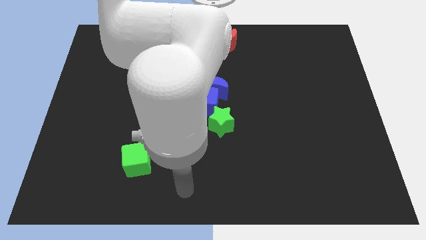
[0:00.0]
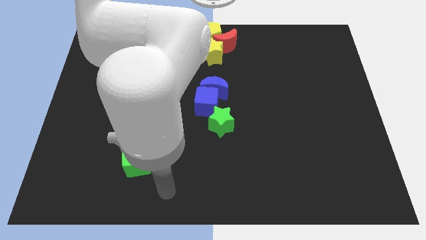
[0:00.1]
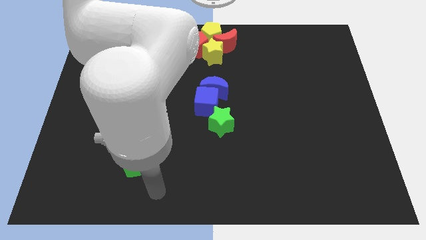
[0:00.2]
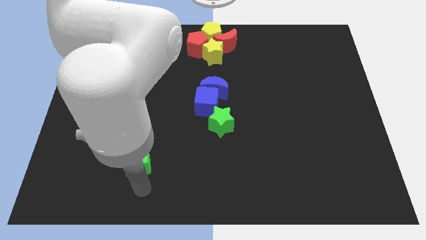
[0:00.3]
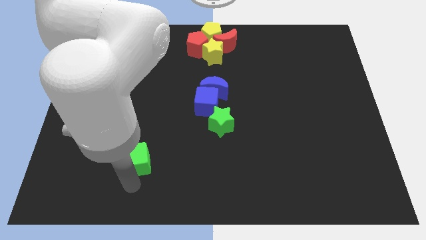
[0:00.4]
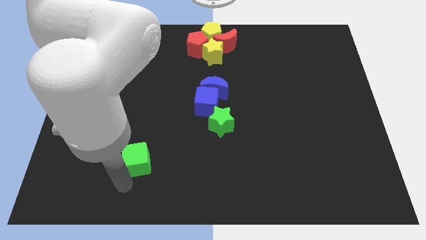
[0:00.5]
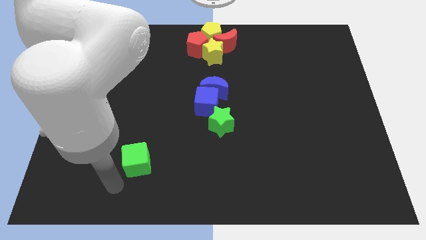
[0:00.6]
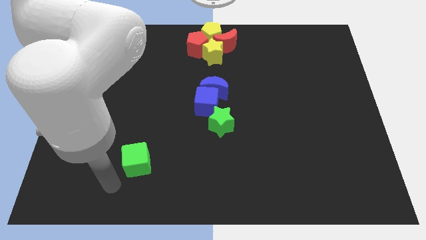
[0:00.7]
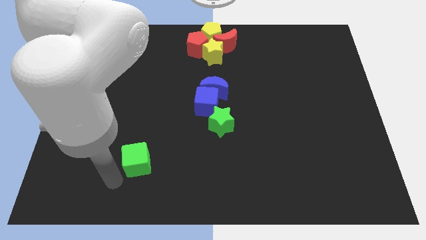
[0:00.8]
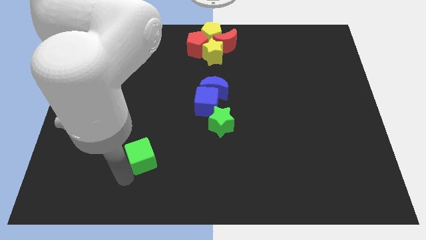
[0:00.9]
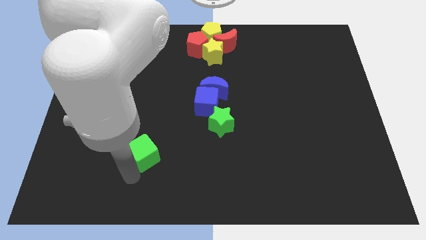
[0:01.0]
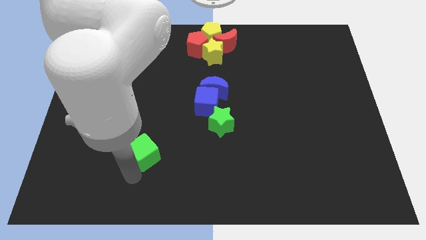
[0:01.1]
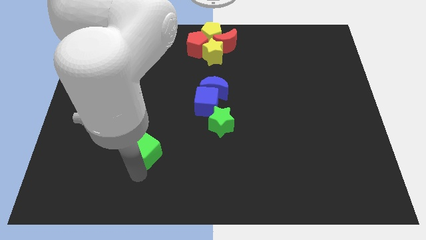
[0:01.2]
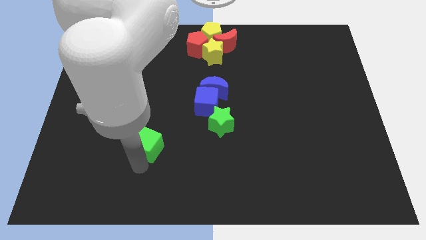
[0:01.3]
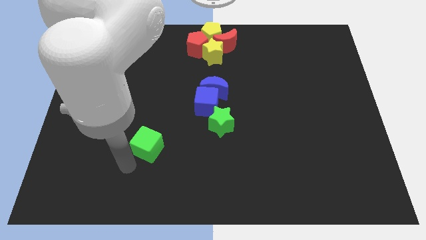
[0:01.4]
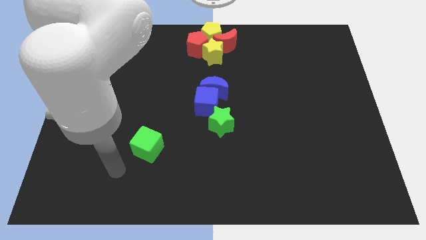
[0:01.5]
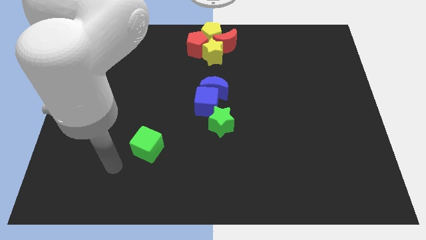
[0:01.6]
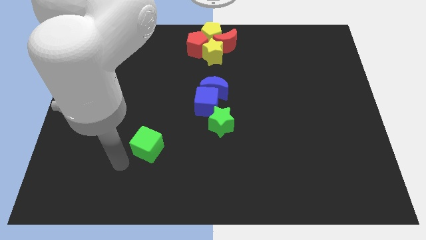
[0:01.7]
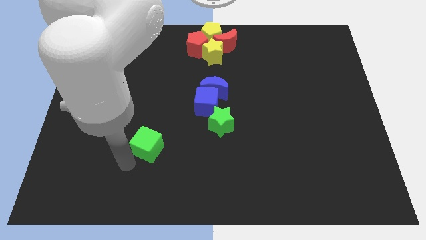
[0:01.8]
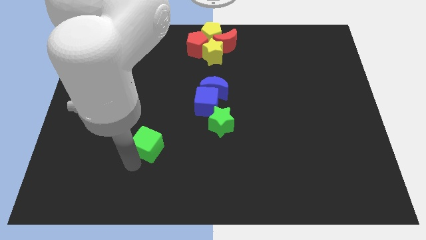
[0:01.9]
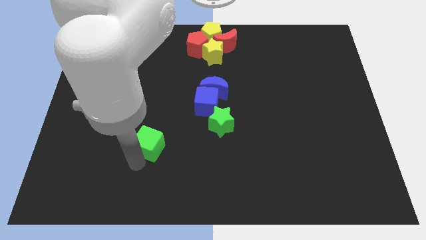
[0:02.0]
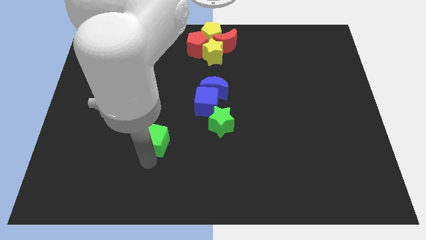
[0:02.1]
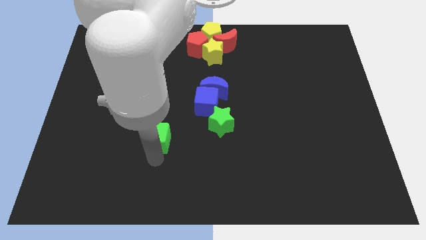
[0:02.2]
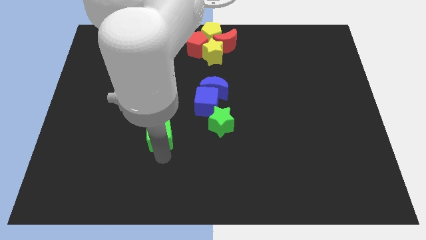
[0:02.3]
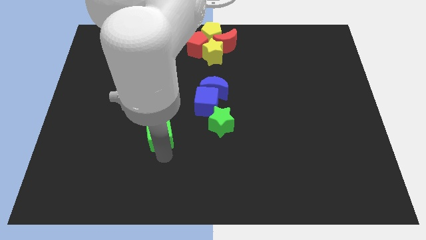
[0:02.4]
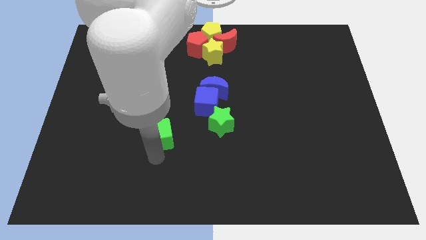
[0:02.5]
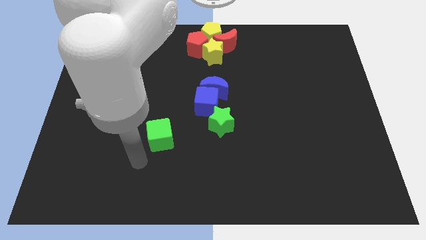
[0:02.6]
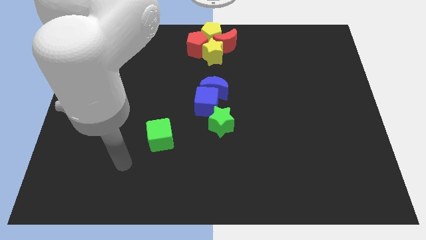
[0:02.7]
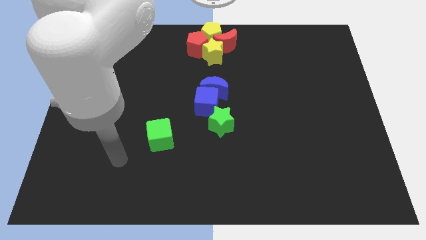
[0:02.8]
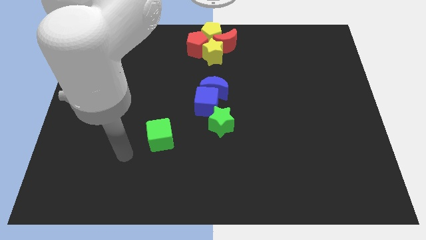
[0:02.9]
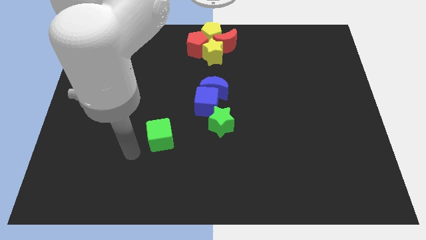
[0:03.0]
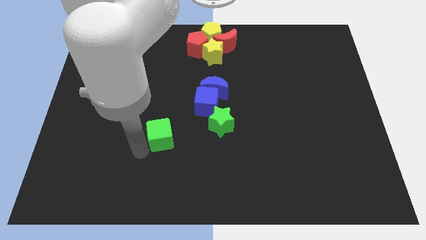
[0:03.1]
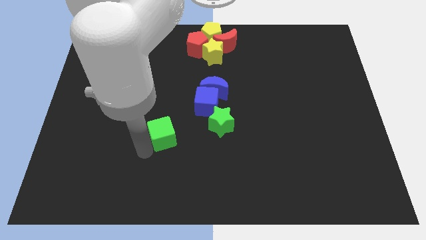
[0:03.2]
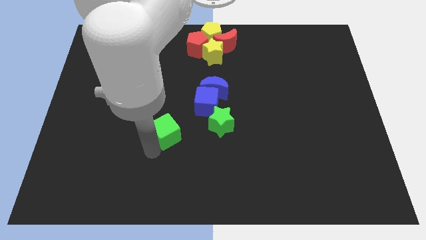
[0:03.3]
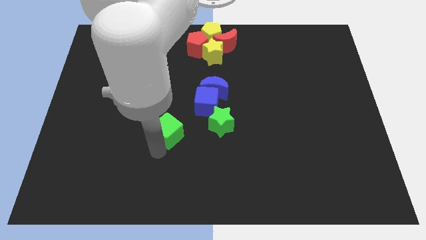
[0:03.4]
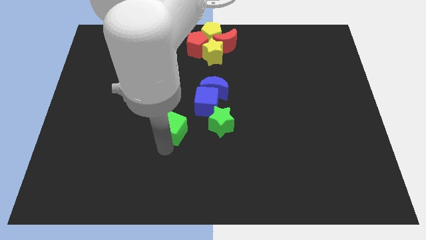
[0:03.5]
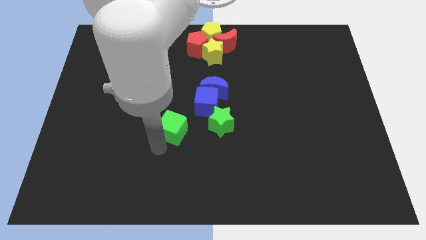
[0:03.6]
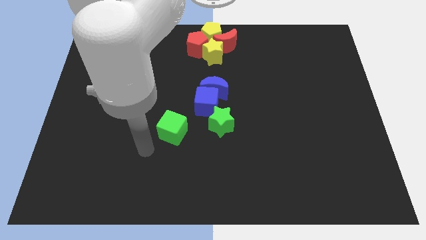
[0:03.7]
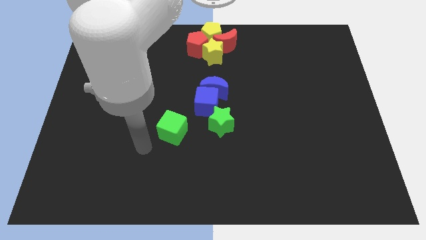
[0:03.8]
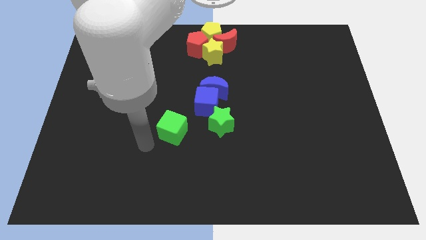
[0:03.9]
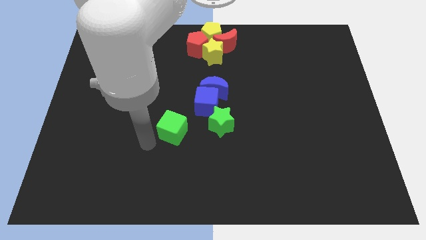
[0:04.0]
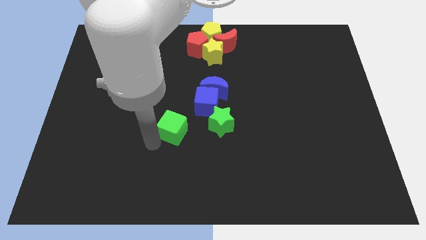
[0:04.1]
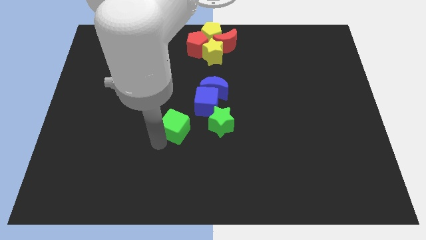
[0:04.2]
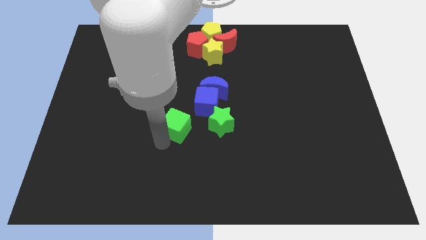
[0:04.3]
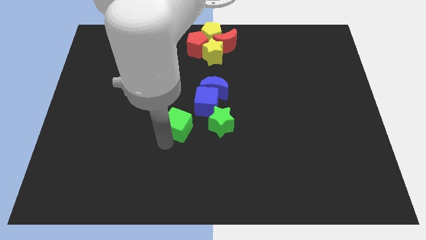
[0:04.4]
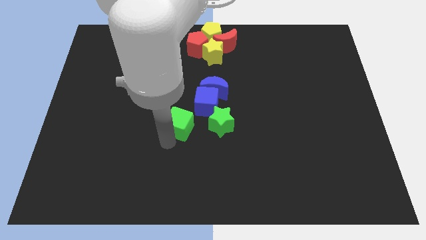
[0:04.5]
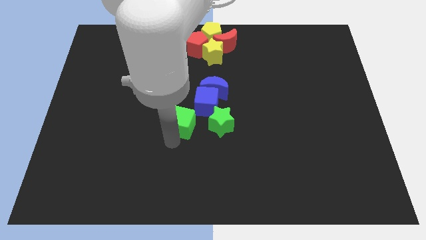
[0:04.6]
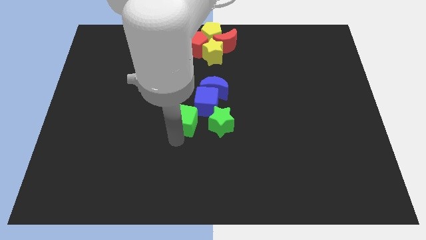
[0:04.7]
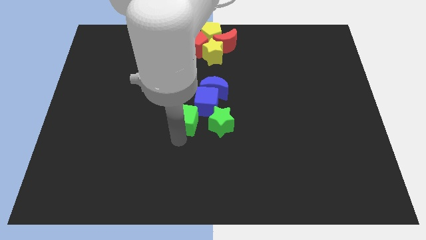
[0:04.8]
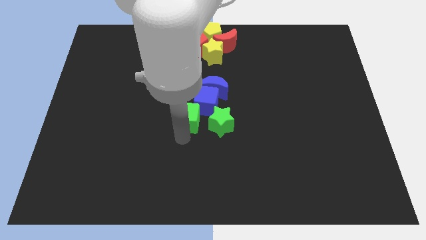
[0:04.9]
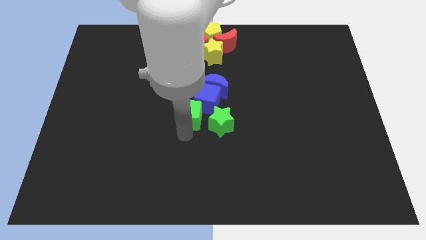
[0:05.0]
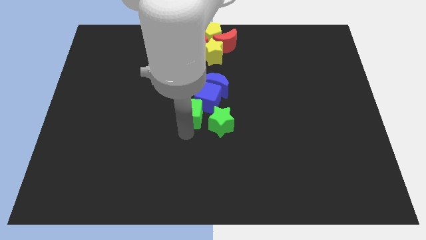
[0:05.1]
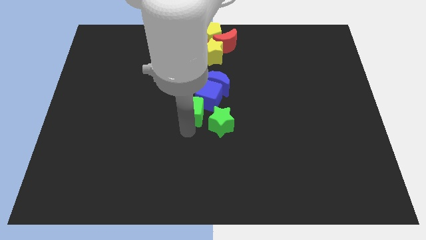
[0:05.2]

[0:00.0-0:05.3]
push the green cube left to the green star

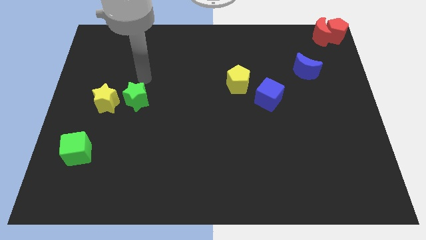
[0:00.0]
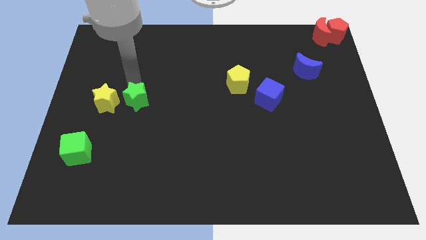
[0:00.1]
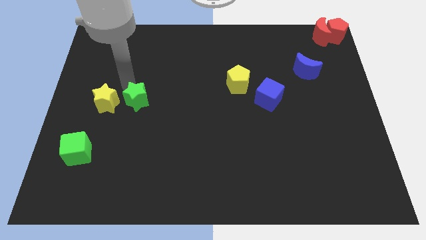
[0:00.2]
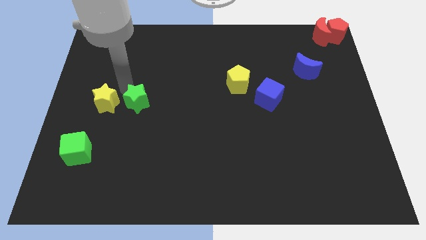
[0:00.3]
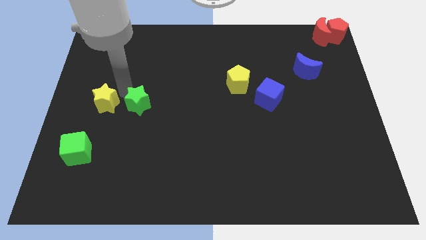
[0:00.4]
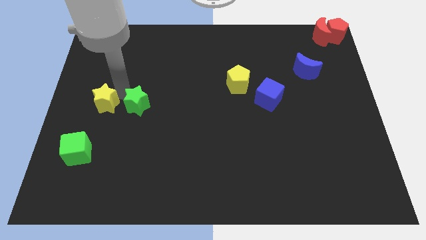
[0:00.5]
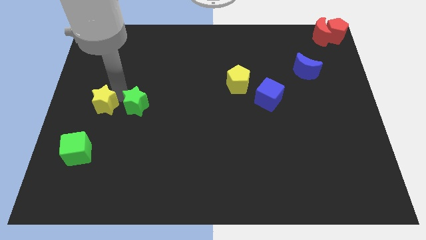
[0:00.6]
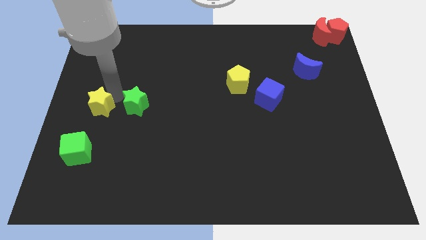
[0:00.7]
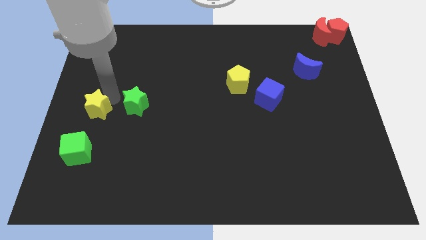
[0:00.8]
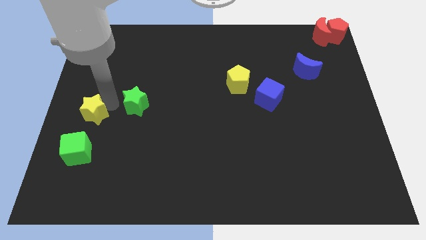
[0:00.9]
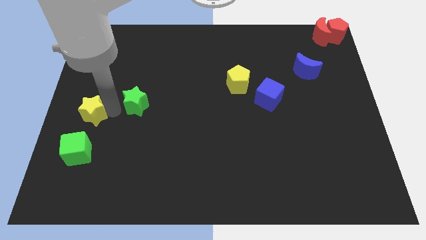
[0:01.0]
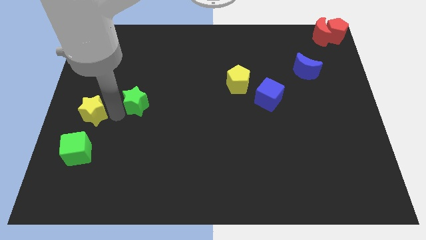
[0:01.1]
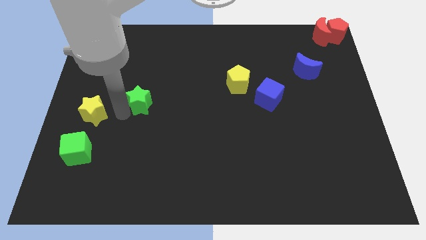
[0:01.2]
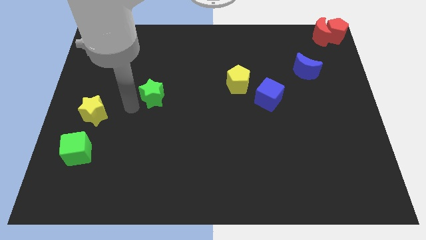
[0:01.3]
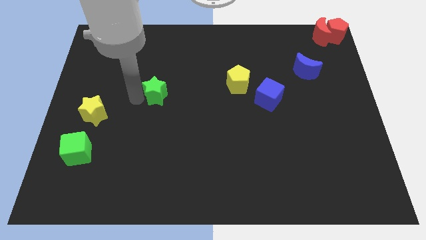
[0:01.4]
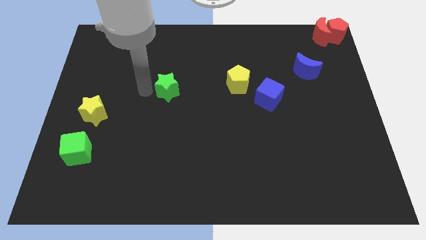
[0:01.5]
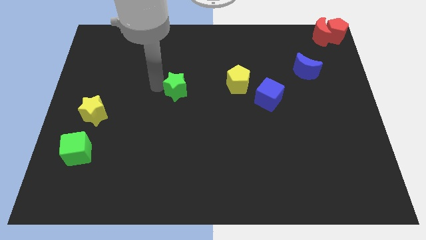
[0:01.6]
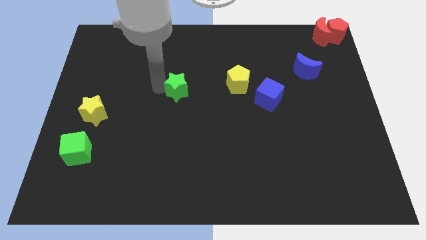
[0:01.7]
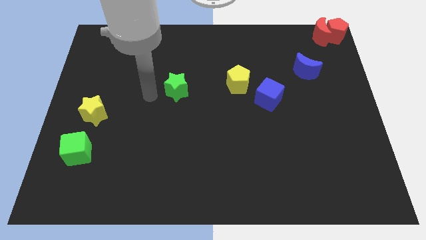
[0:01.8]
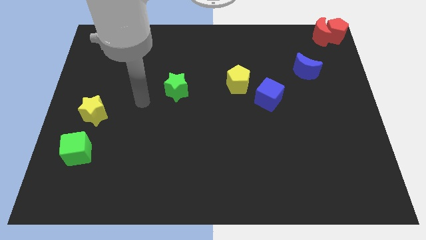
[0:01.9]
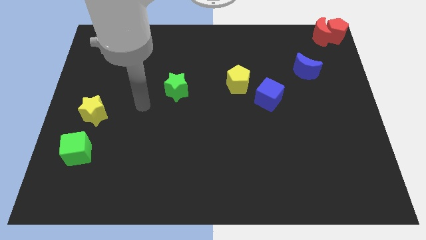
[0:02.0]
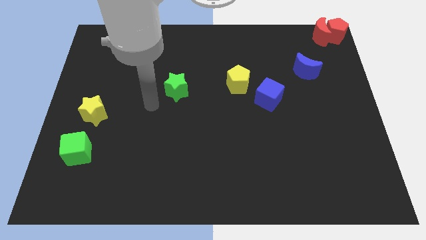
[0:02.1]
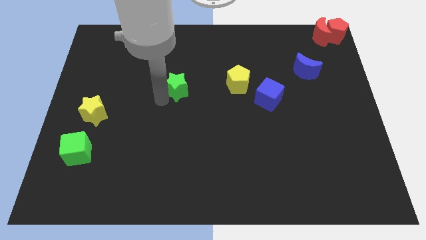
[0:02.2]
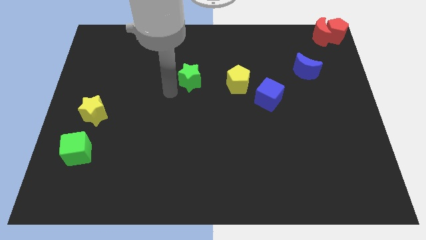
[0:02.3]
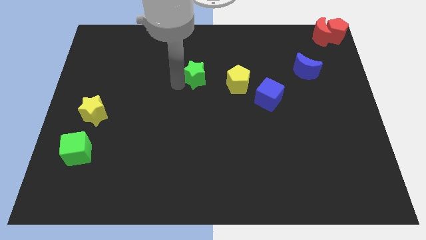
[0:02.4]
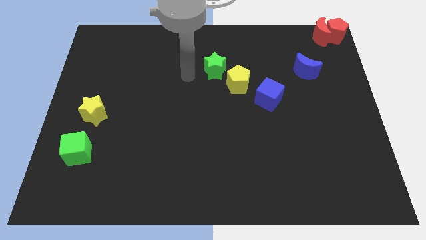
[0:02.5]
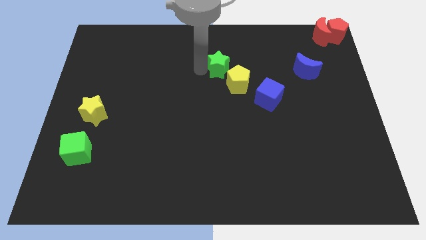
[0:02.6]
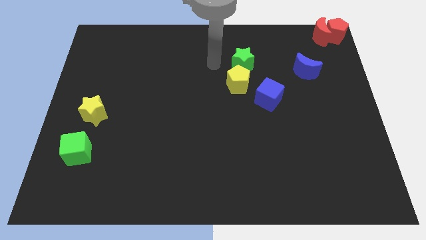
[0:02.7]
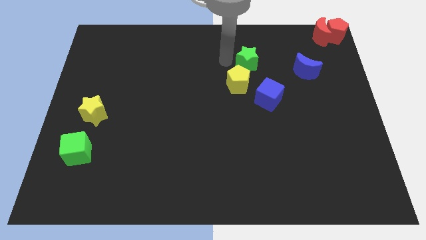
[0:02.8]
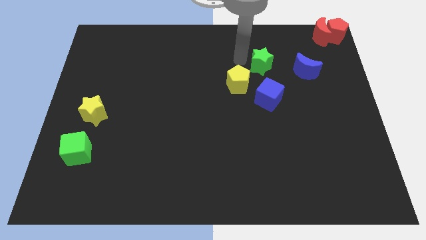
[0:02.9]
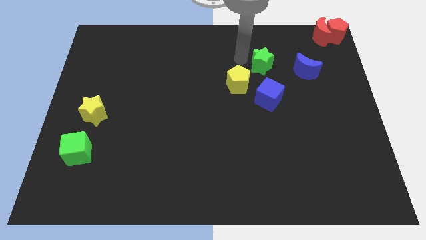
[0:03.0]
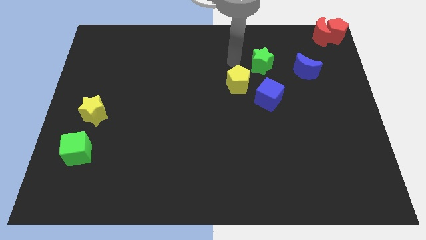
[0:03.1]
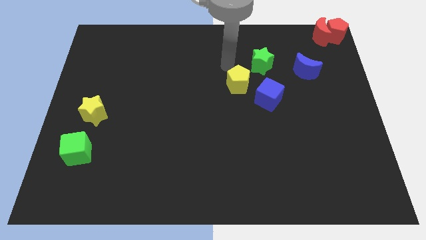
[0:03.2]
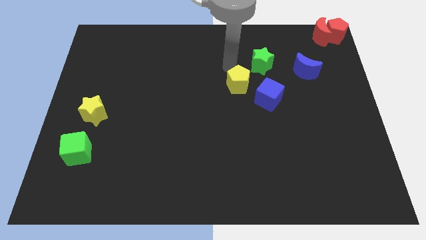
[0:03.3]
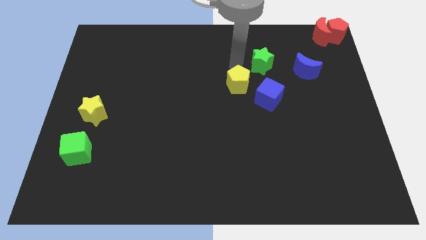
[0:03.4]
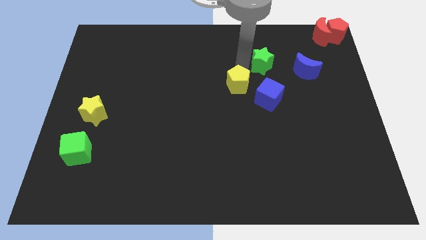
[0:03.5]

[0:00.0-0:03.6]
push green star diagonally above yellow pentagon
